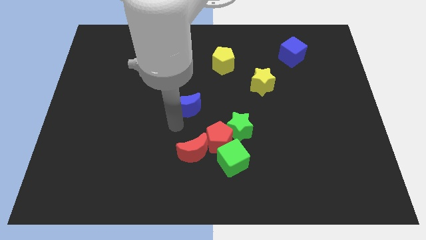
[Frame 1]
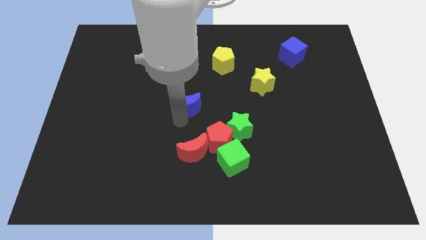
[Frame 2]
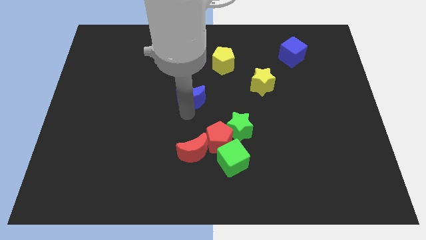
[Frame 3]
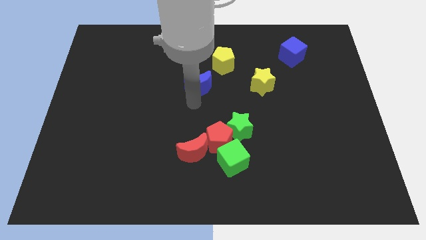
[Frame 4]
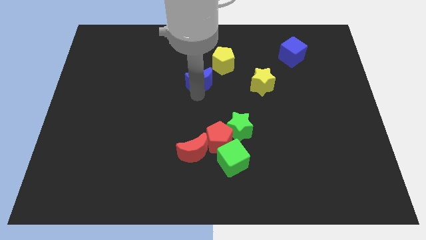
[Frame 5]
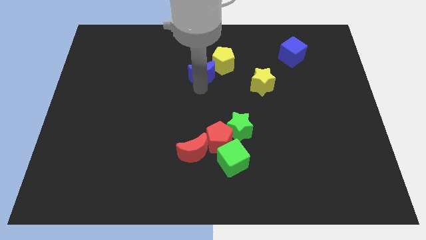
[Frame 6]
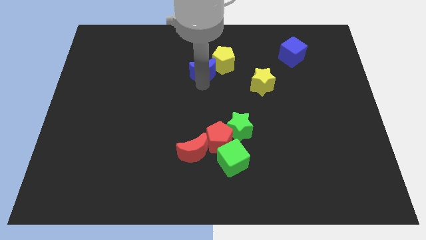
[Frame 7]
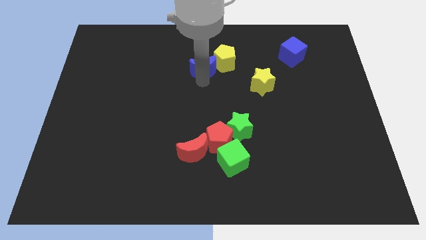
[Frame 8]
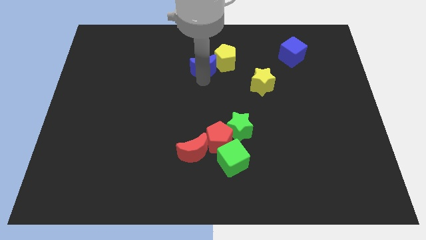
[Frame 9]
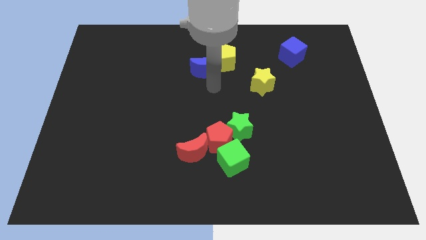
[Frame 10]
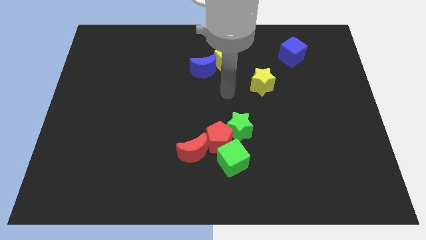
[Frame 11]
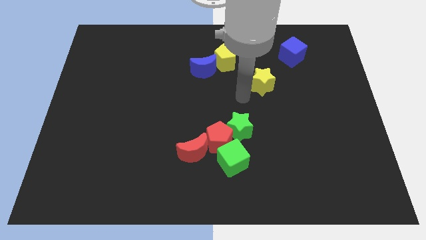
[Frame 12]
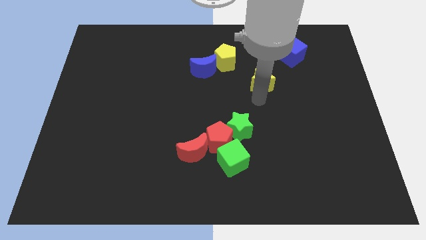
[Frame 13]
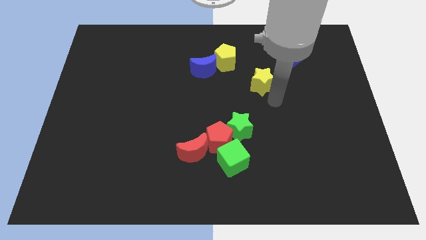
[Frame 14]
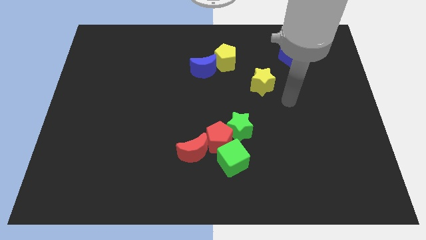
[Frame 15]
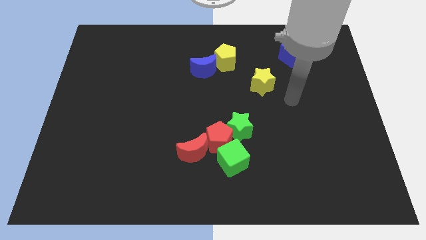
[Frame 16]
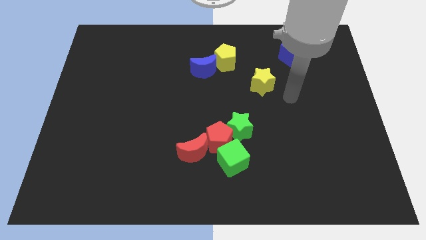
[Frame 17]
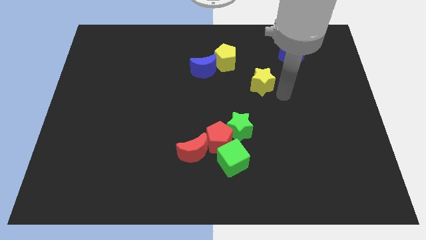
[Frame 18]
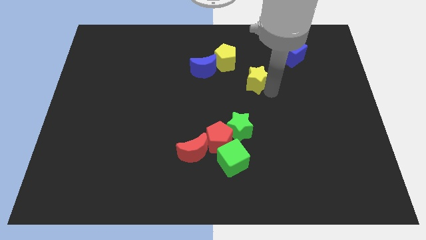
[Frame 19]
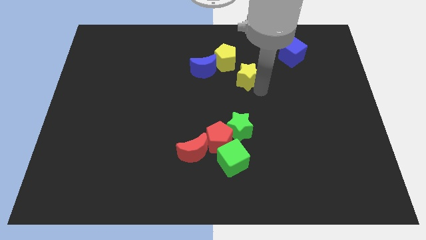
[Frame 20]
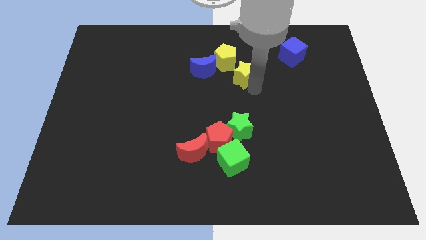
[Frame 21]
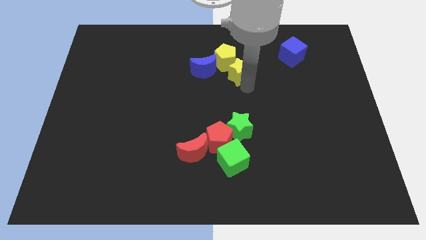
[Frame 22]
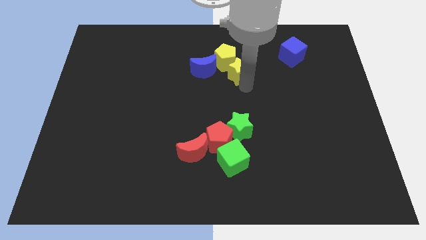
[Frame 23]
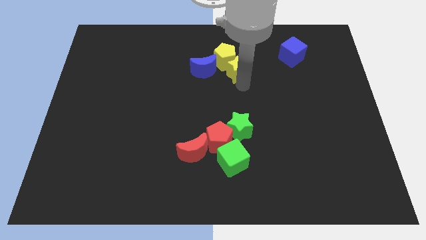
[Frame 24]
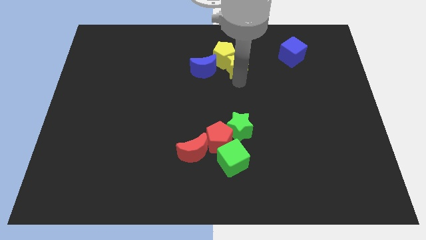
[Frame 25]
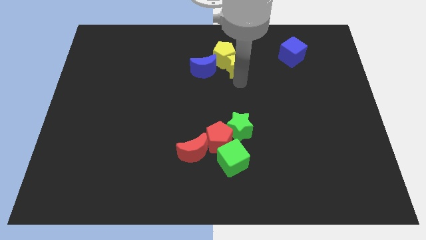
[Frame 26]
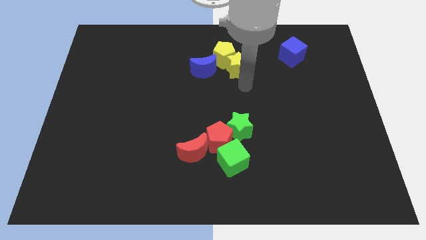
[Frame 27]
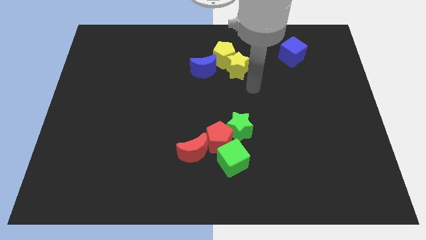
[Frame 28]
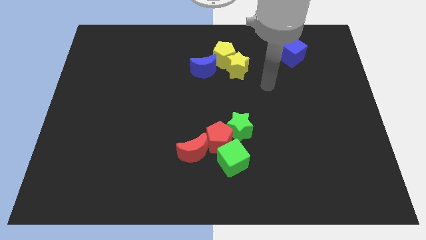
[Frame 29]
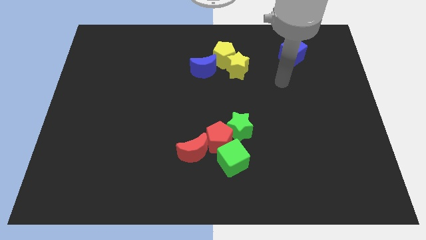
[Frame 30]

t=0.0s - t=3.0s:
group up the blue moon yellow star and yellow pentagon at the top center of the board

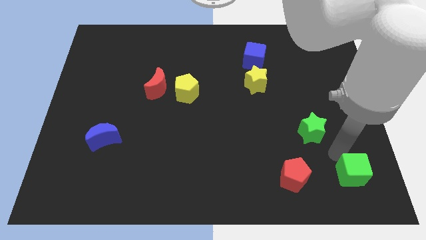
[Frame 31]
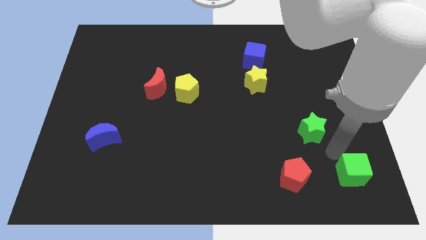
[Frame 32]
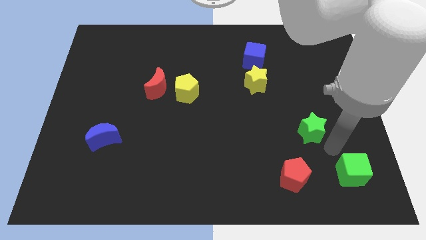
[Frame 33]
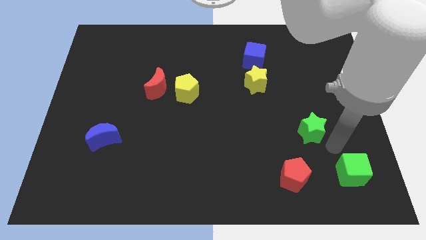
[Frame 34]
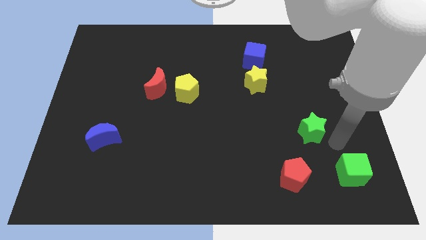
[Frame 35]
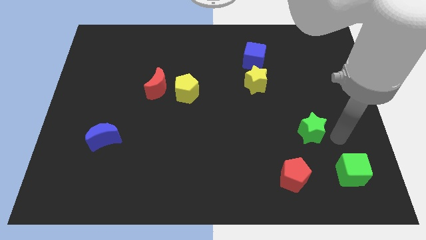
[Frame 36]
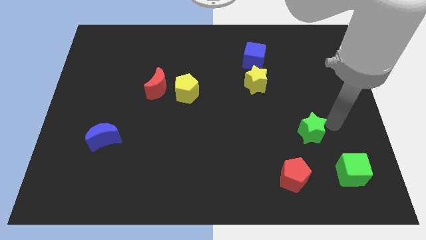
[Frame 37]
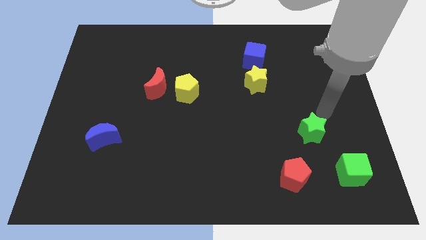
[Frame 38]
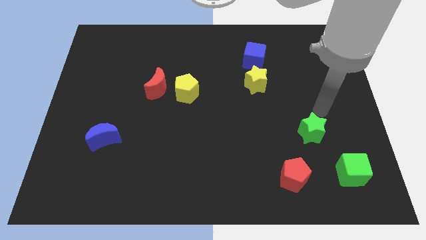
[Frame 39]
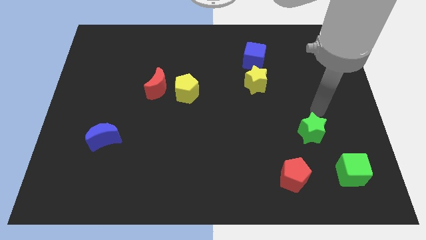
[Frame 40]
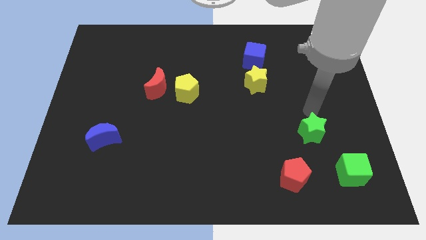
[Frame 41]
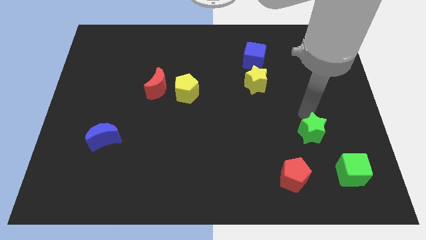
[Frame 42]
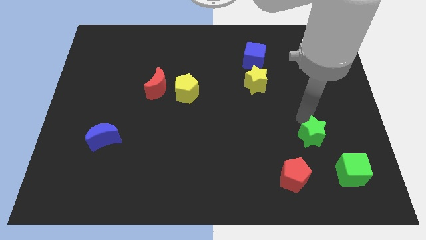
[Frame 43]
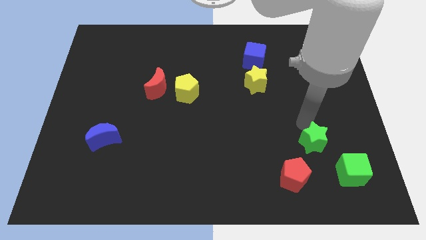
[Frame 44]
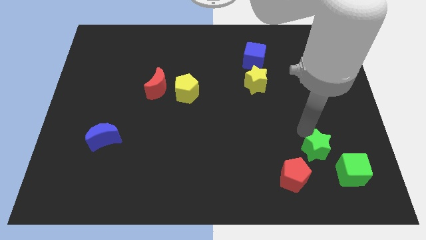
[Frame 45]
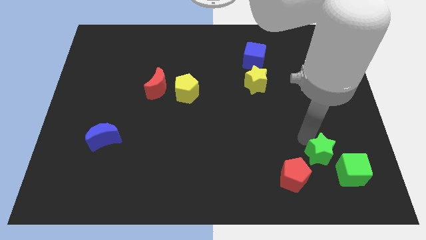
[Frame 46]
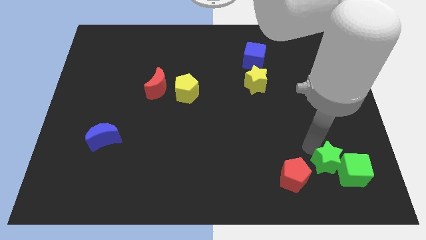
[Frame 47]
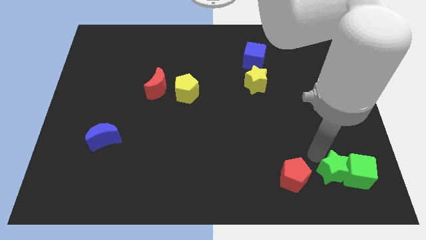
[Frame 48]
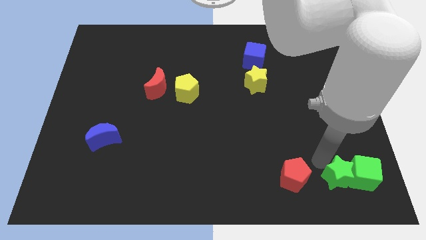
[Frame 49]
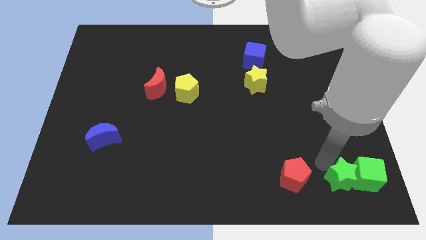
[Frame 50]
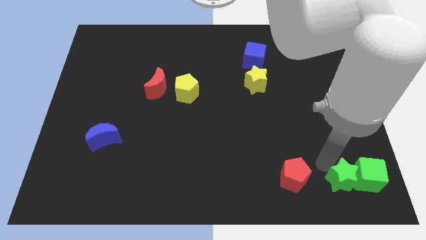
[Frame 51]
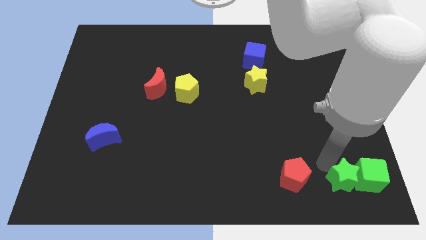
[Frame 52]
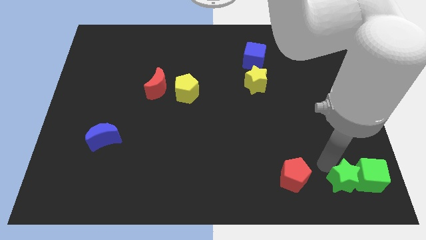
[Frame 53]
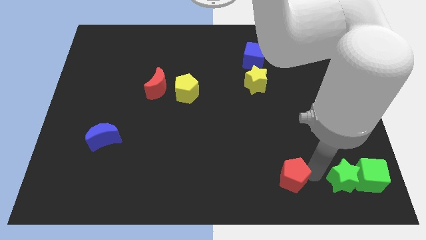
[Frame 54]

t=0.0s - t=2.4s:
move the green star into the green cube

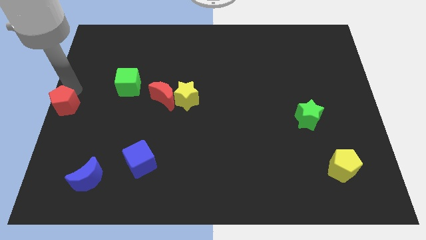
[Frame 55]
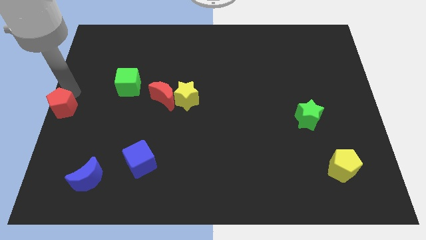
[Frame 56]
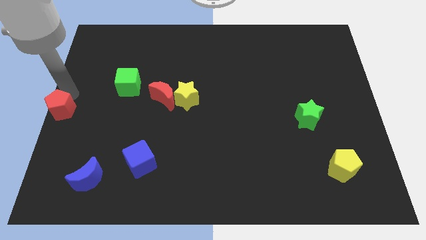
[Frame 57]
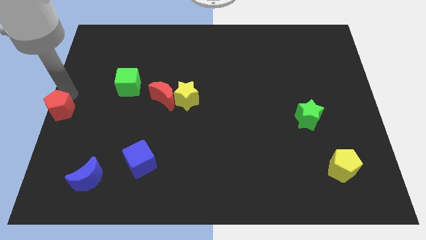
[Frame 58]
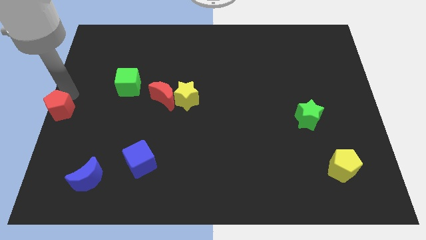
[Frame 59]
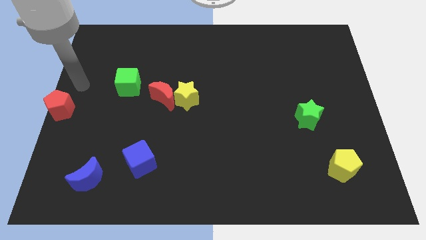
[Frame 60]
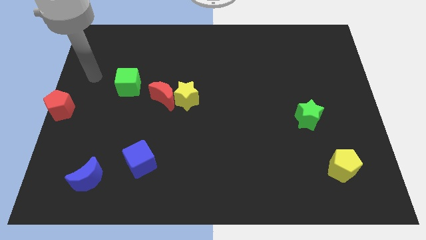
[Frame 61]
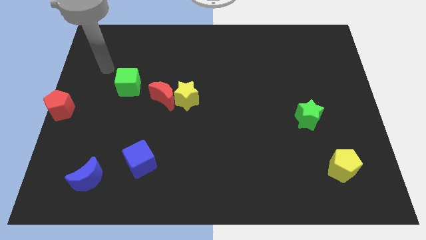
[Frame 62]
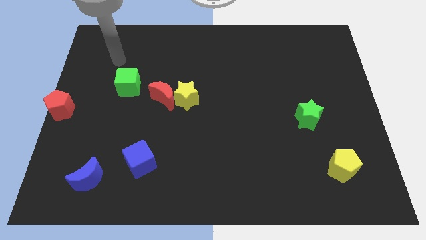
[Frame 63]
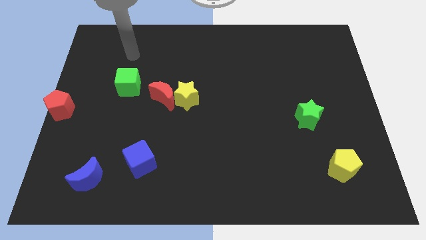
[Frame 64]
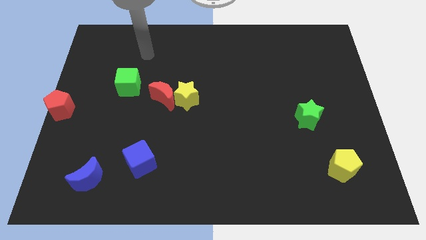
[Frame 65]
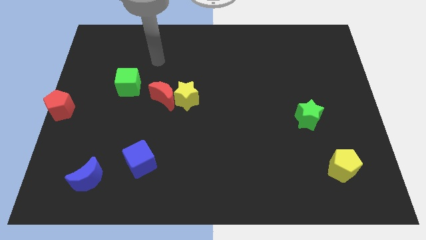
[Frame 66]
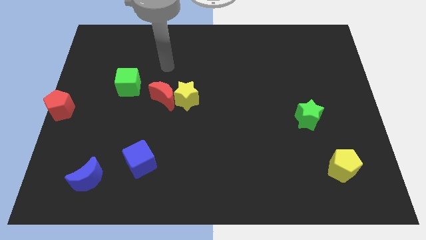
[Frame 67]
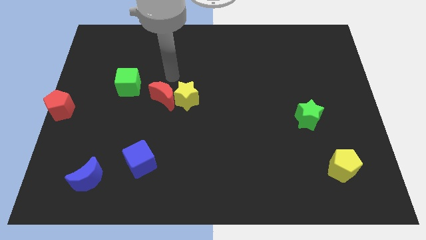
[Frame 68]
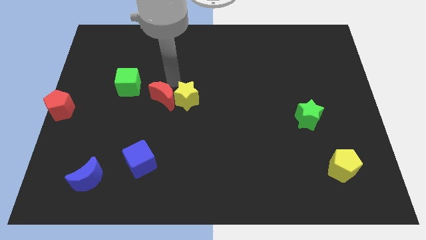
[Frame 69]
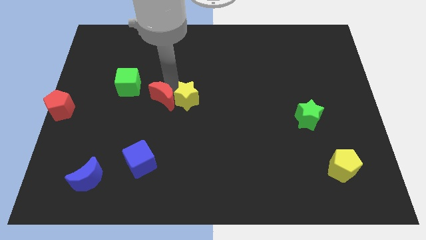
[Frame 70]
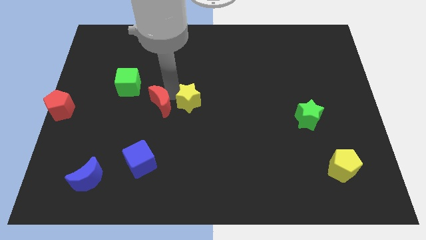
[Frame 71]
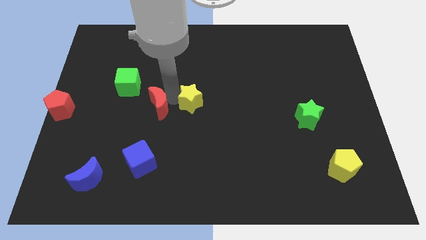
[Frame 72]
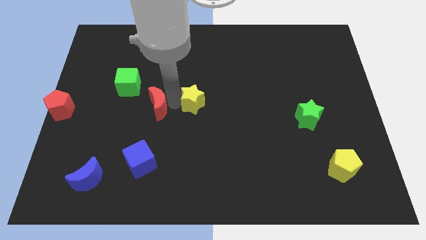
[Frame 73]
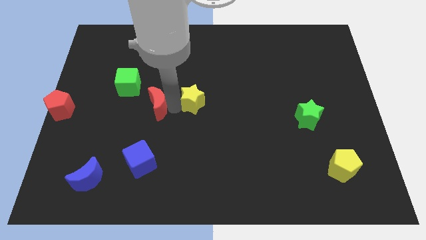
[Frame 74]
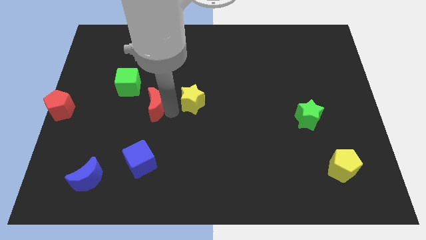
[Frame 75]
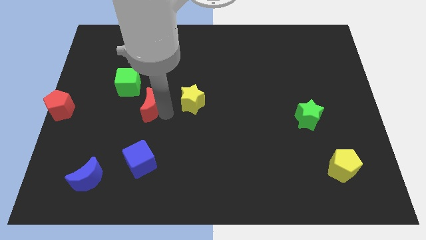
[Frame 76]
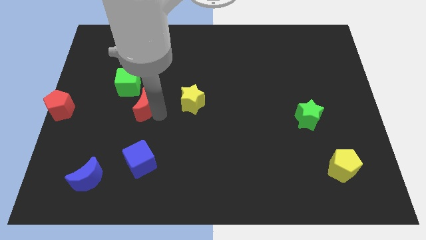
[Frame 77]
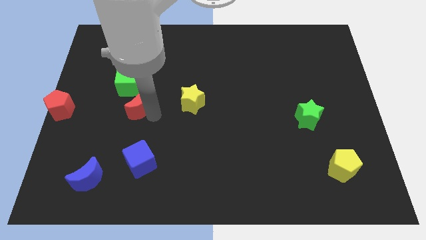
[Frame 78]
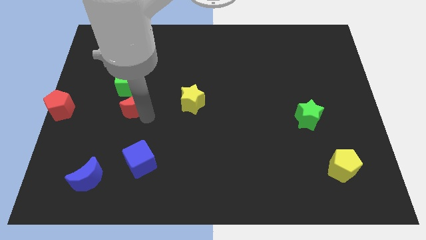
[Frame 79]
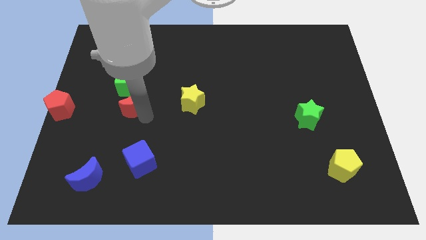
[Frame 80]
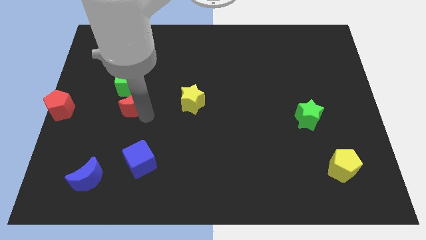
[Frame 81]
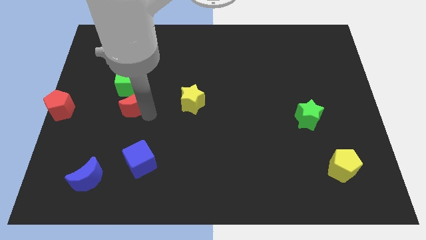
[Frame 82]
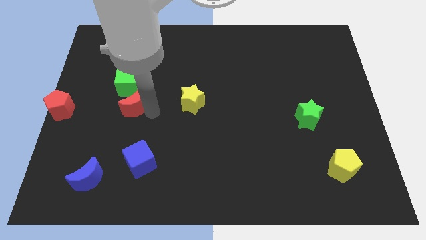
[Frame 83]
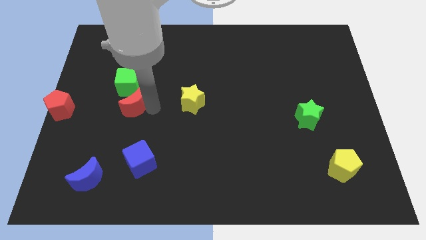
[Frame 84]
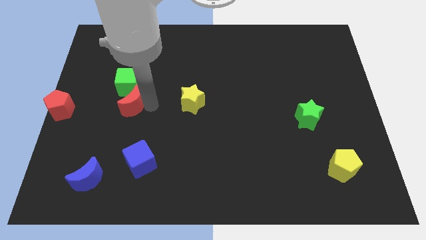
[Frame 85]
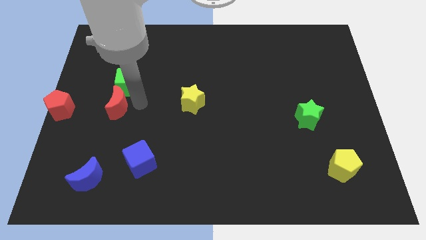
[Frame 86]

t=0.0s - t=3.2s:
place the red moon below the green cube

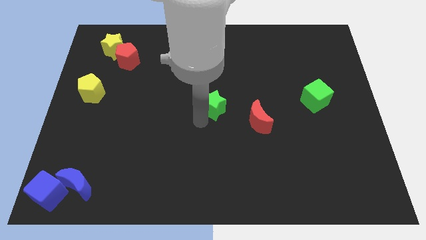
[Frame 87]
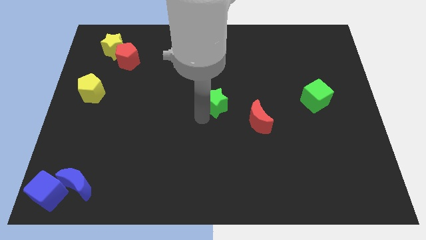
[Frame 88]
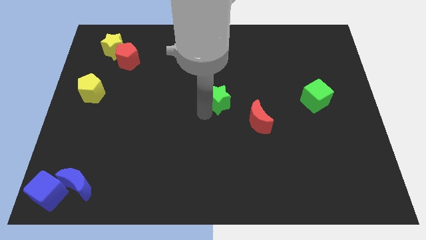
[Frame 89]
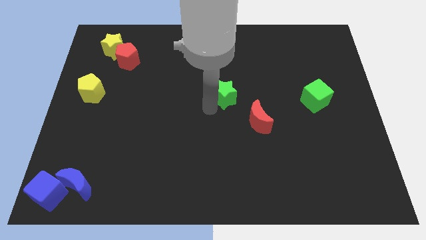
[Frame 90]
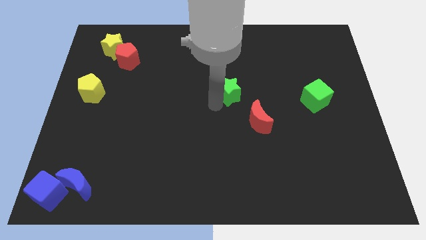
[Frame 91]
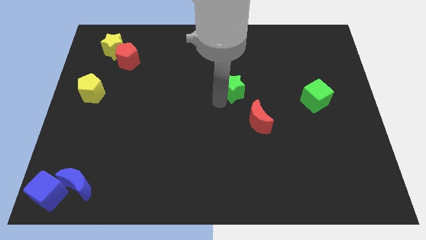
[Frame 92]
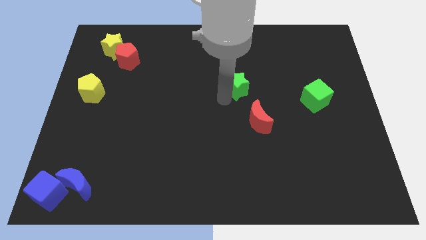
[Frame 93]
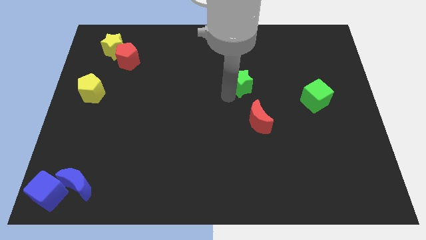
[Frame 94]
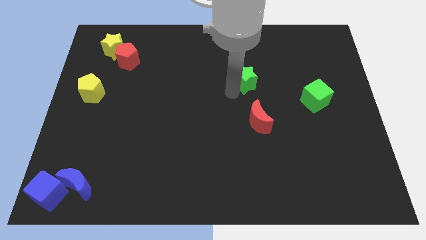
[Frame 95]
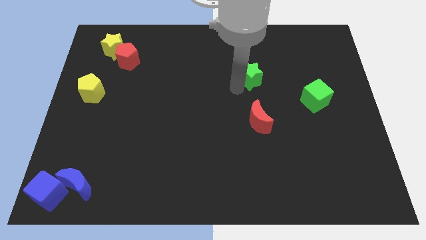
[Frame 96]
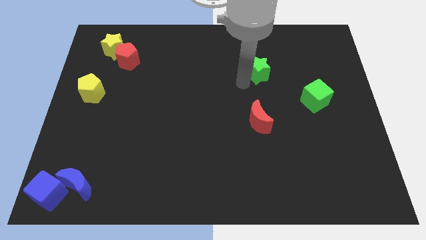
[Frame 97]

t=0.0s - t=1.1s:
move the green star vertically above the red crescent
